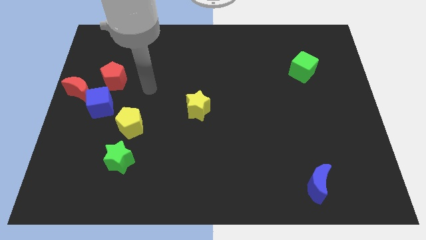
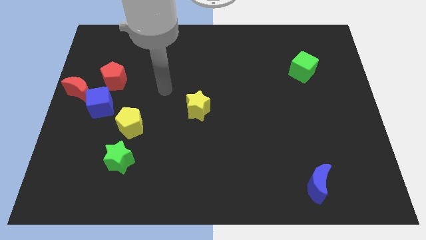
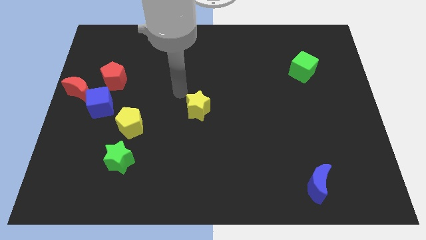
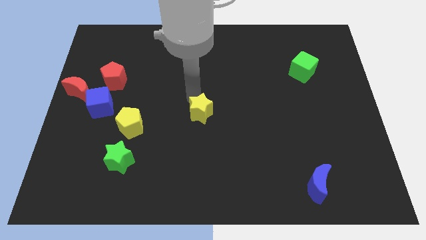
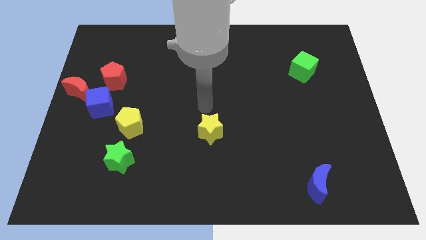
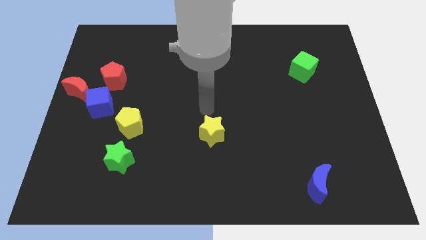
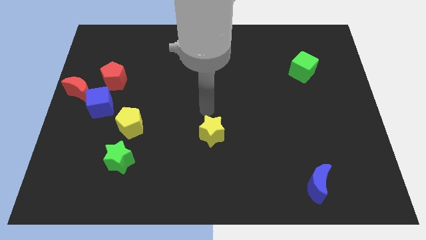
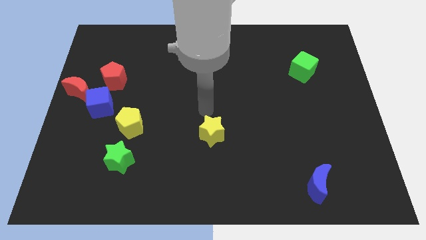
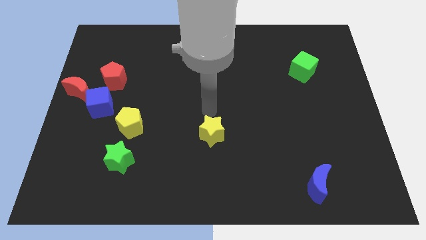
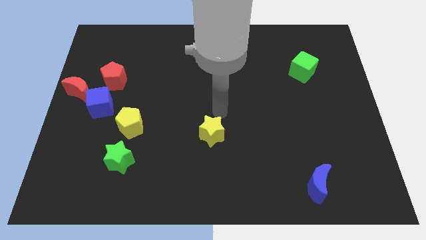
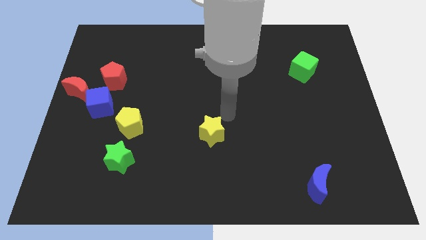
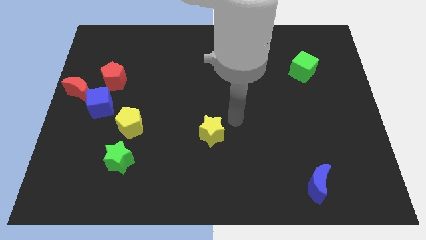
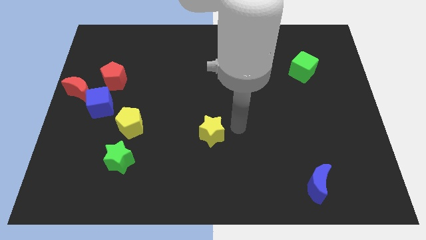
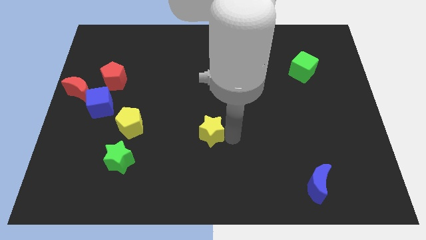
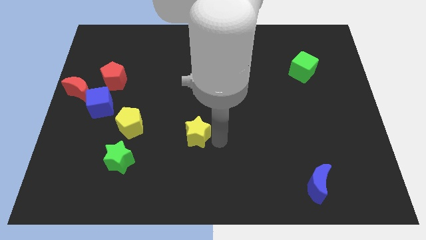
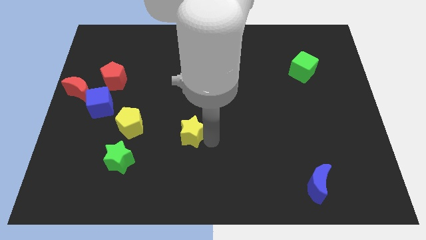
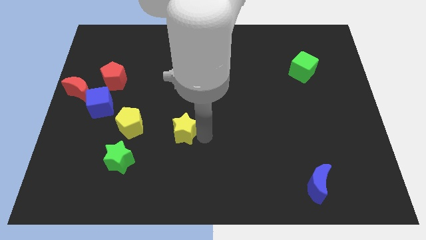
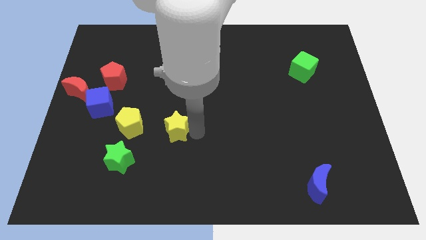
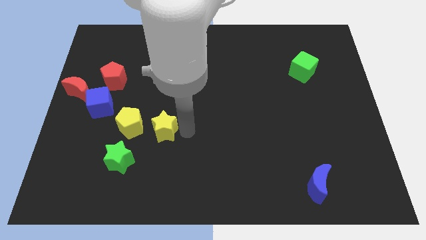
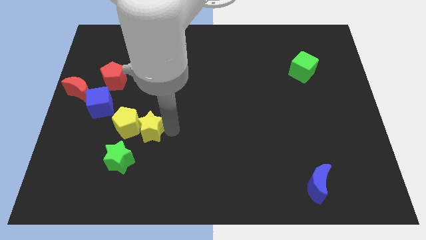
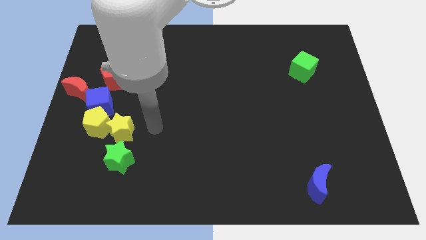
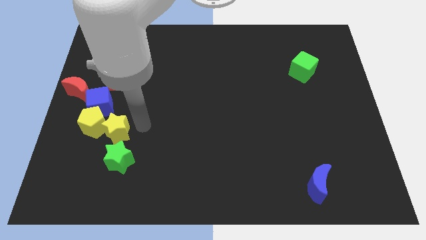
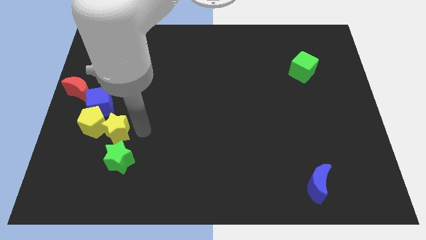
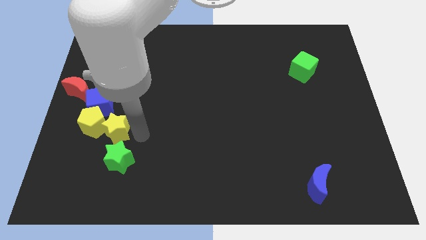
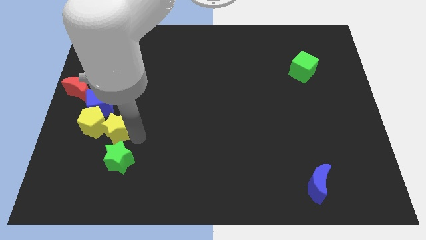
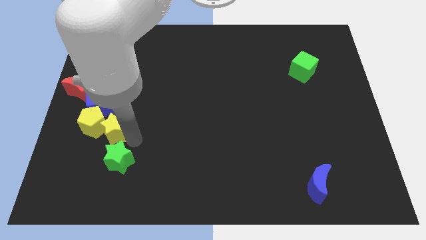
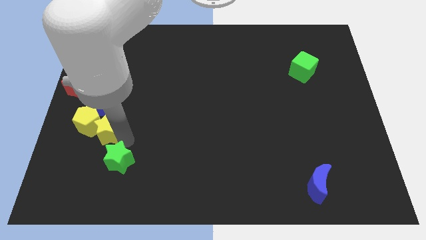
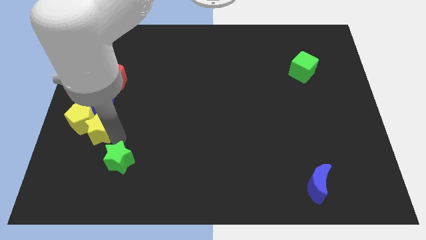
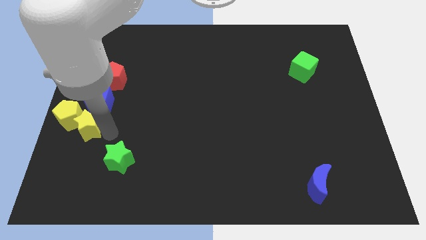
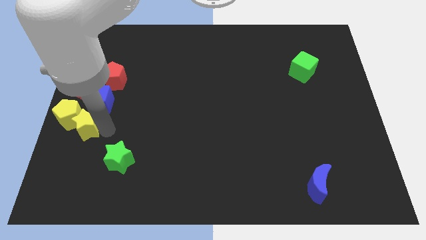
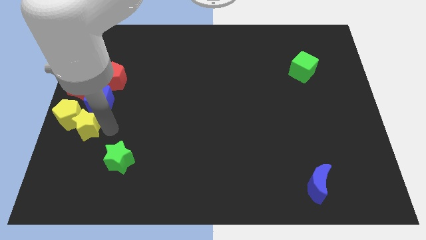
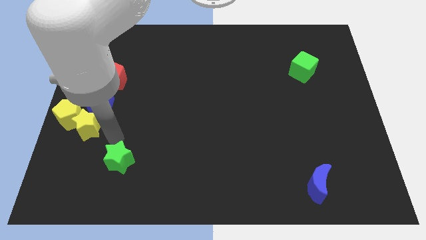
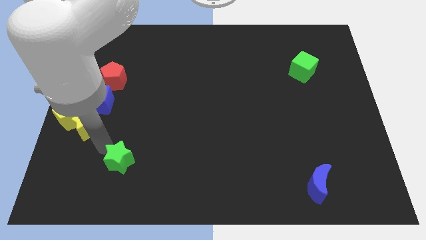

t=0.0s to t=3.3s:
move the yellow blocks to the bottom side of the group of blocks

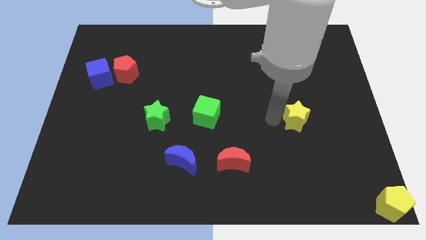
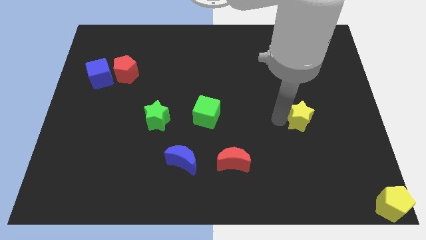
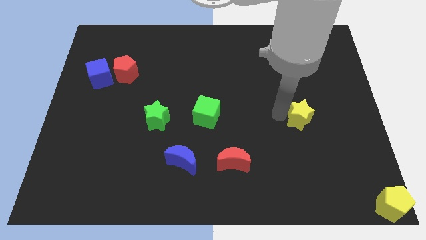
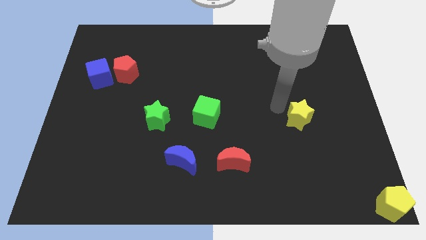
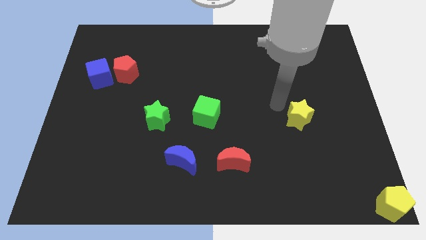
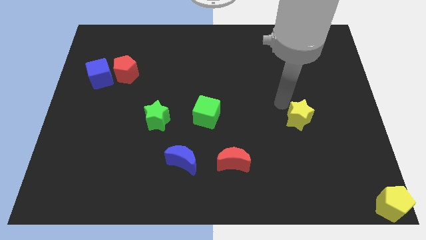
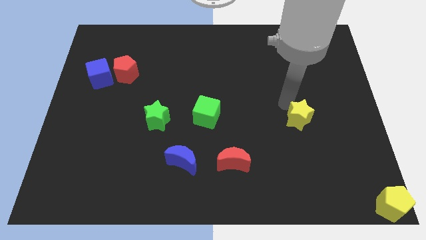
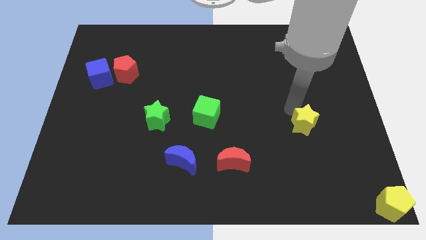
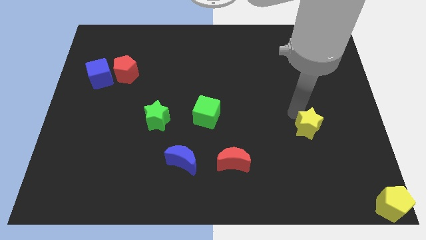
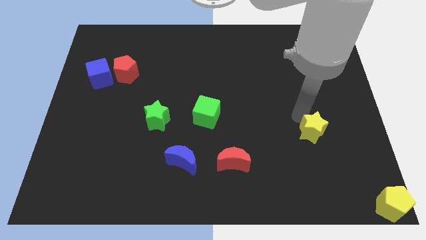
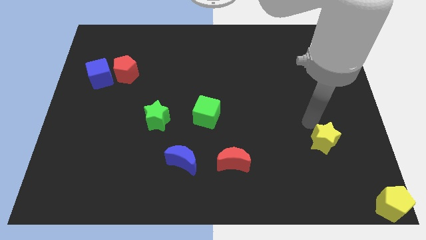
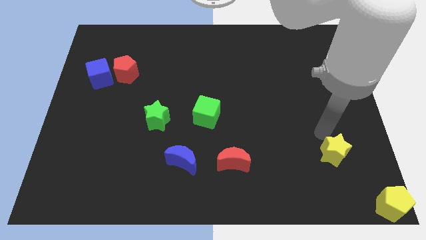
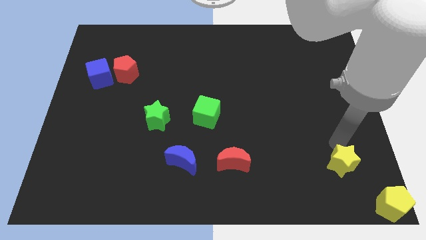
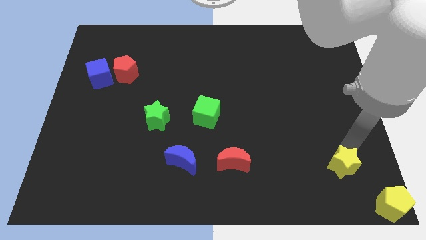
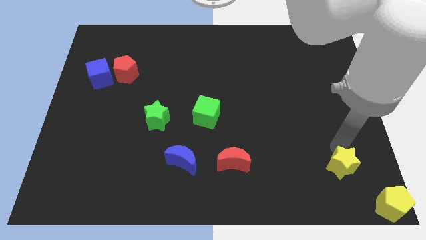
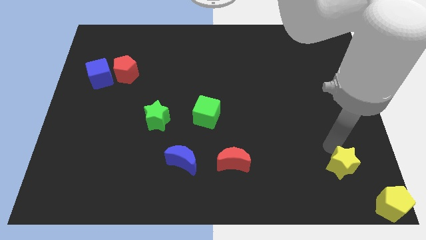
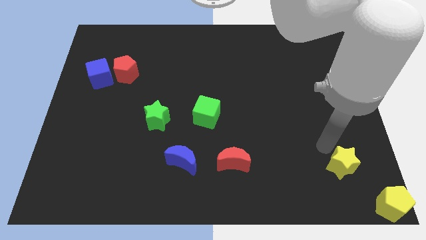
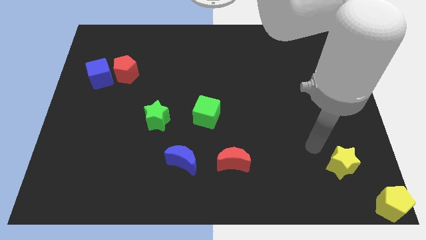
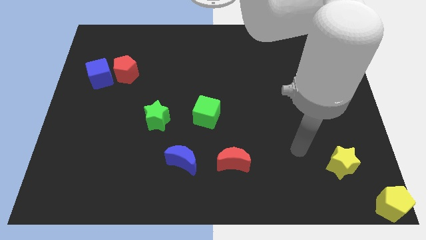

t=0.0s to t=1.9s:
move yellow star towards yellow pentagon

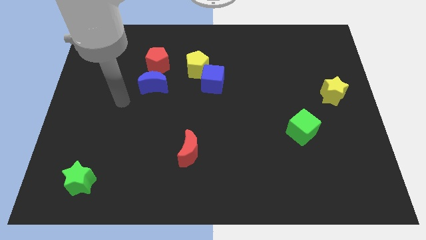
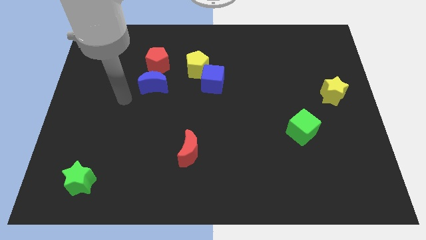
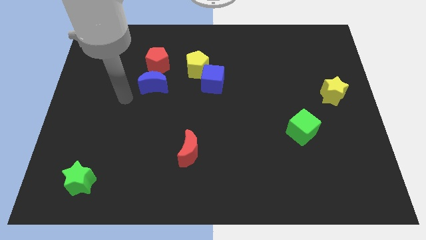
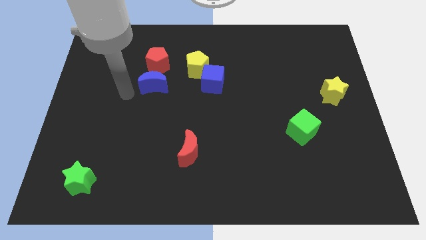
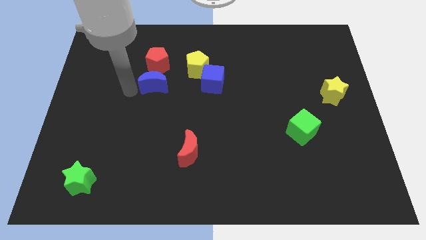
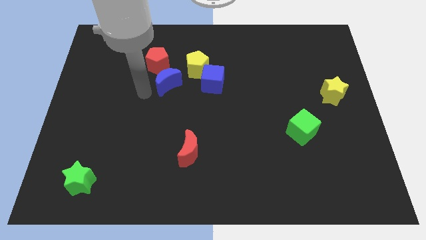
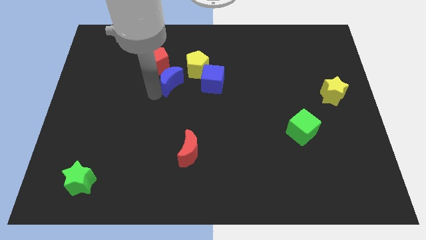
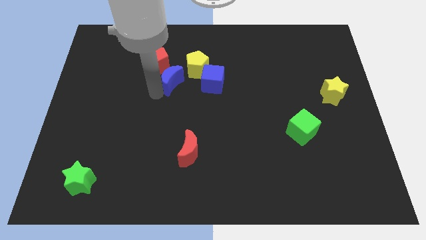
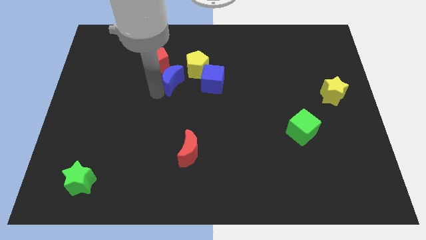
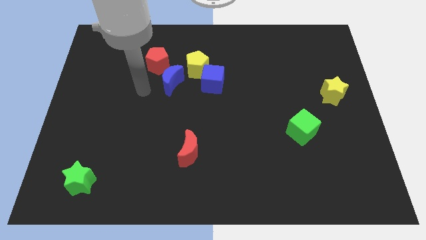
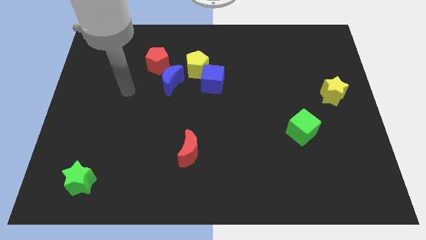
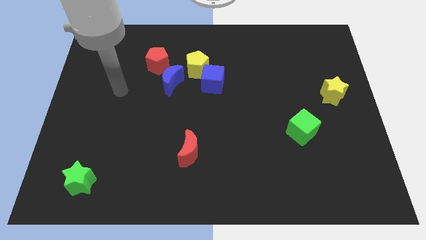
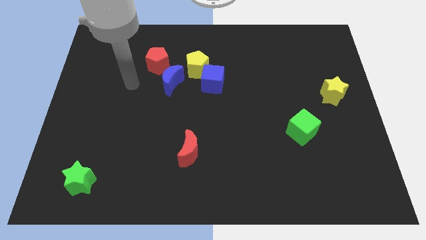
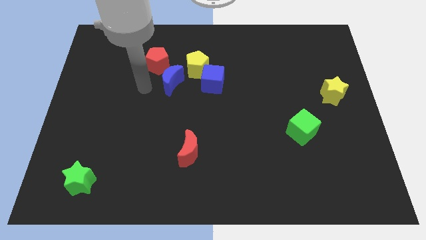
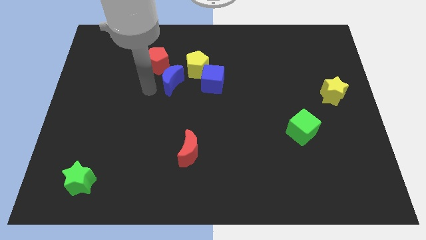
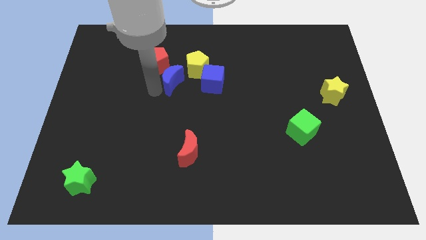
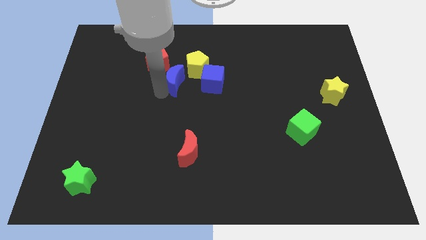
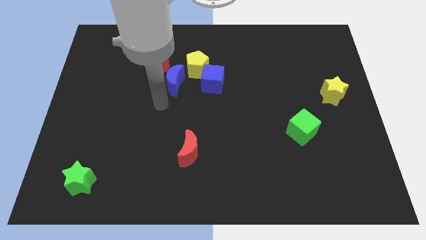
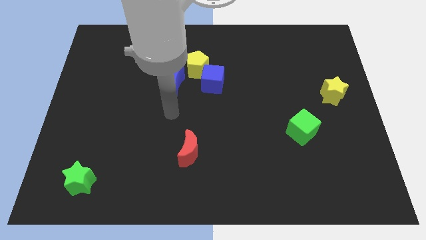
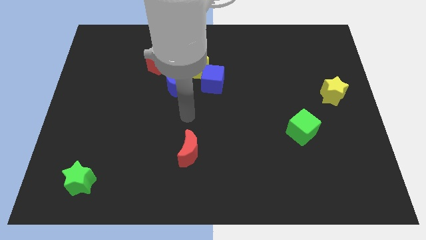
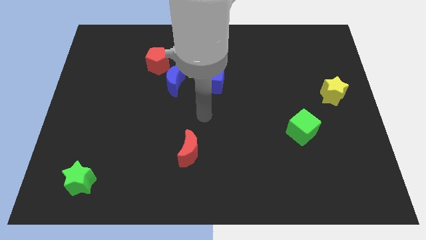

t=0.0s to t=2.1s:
move blue moon towards yellow pentagon

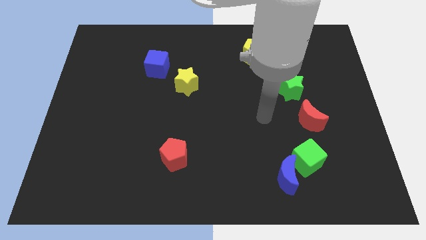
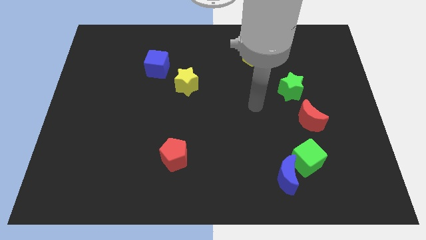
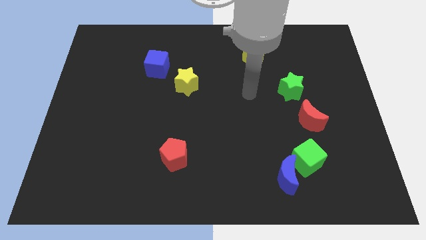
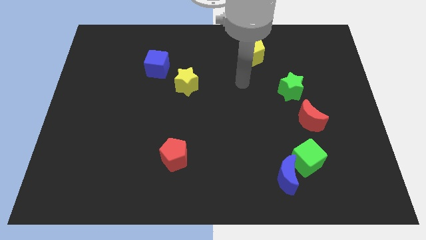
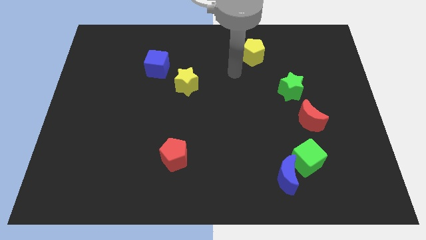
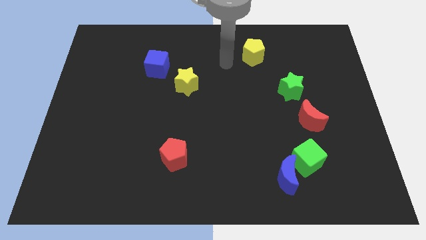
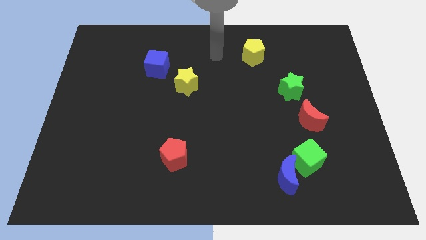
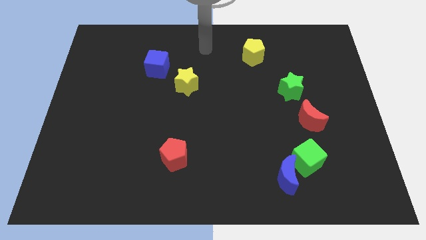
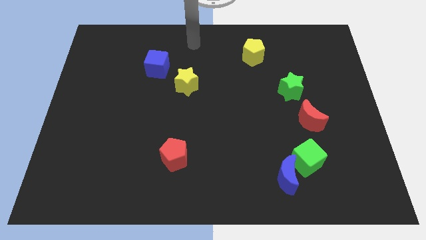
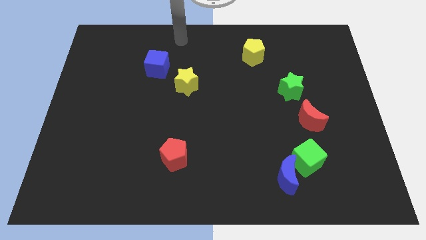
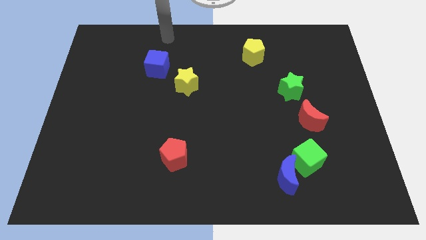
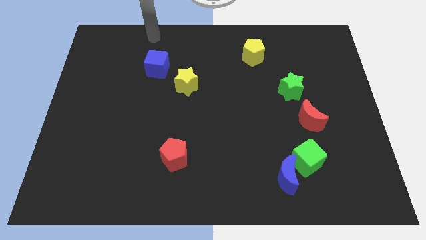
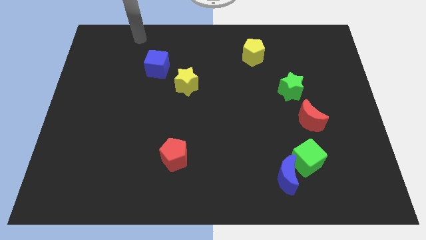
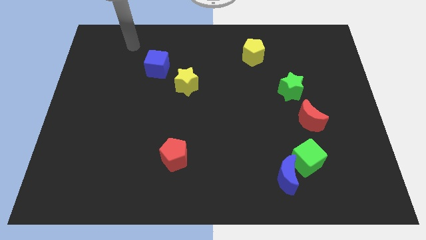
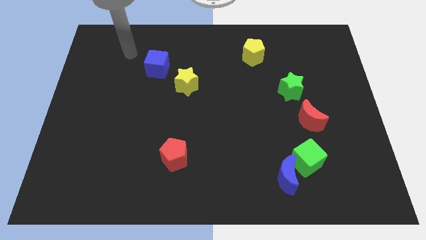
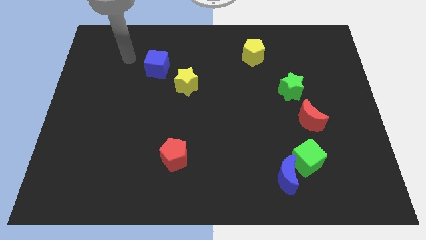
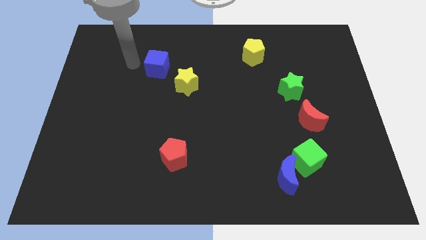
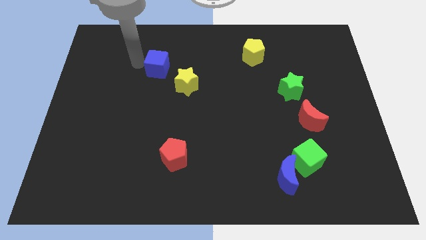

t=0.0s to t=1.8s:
place your arm to the left of the blue cube
